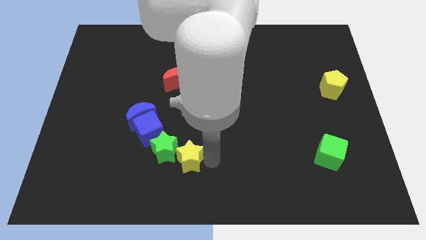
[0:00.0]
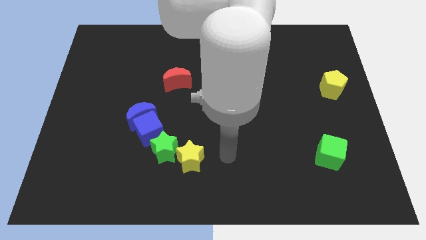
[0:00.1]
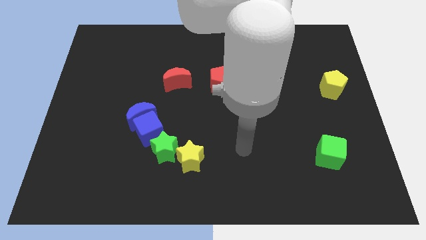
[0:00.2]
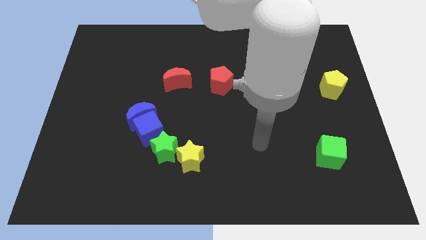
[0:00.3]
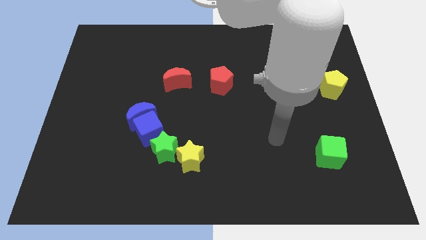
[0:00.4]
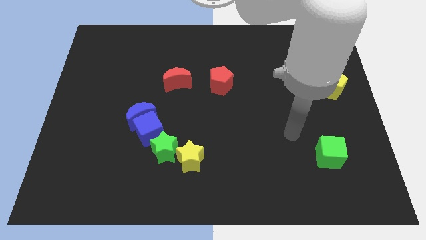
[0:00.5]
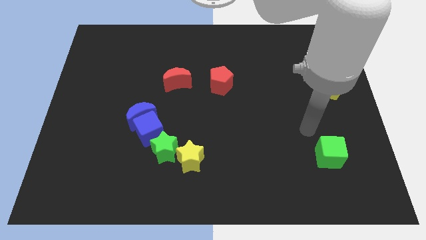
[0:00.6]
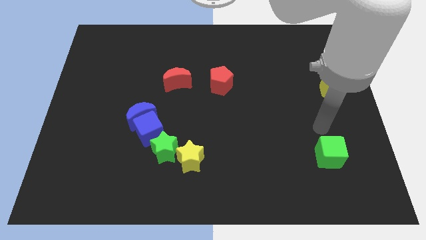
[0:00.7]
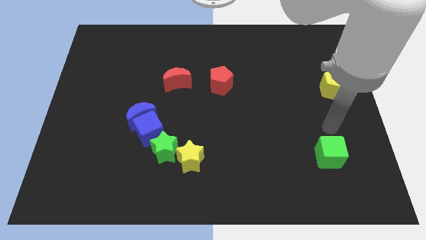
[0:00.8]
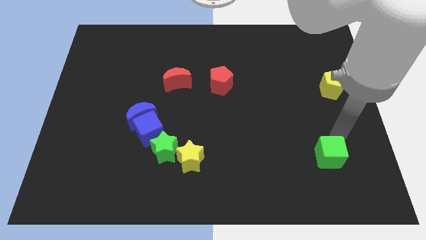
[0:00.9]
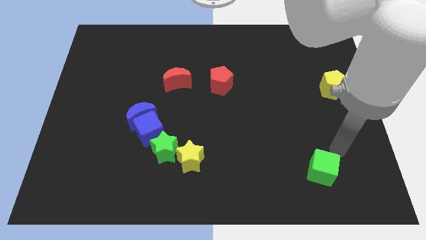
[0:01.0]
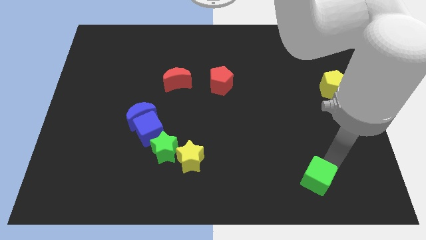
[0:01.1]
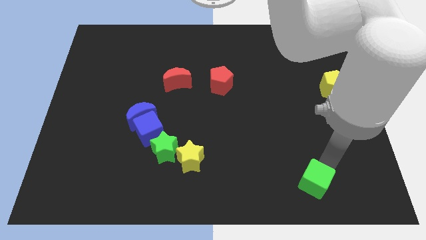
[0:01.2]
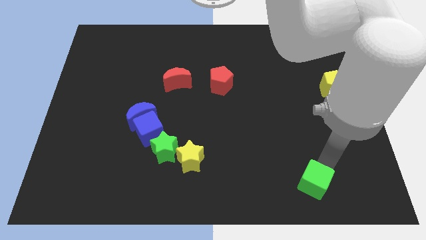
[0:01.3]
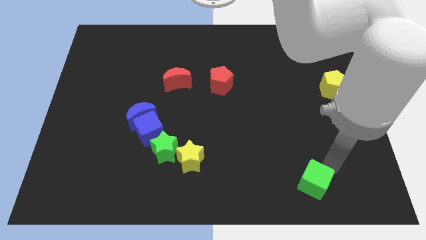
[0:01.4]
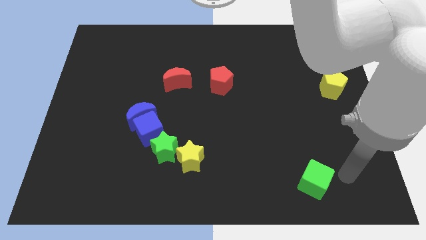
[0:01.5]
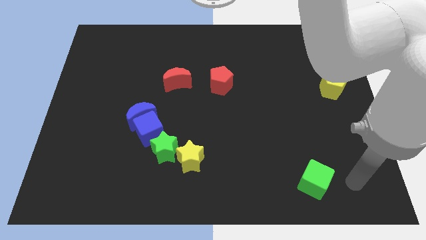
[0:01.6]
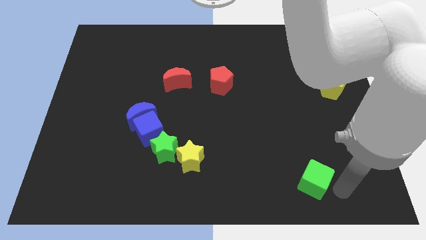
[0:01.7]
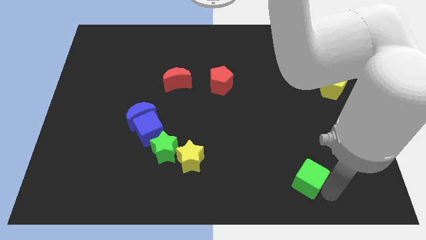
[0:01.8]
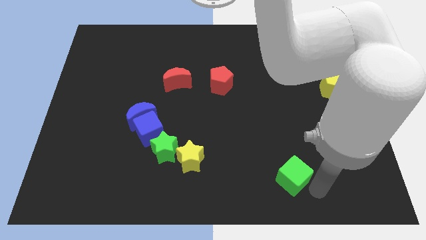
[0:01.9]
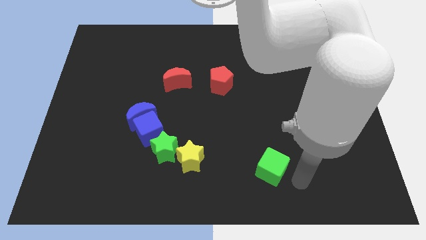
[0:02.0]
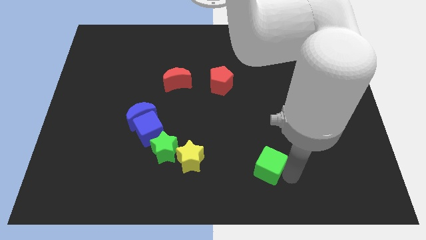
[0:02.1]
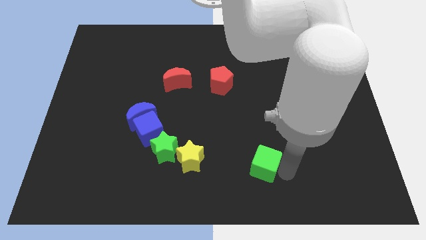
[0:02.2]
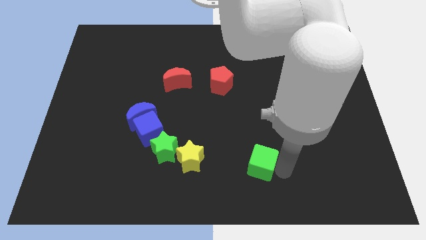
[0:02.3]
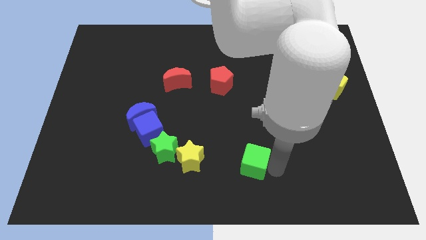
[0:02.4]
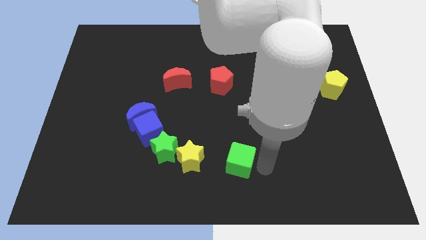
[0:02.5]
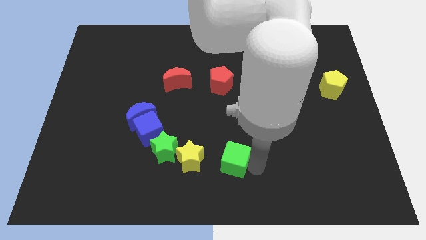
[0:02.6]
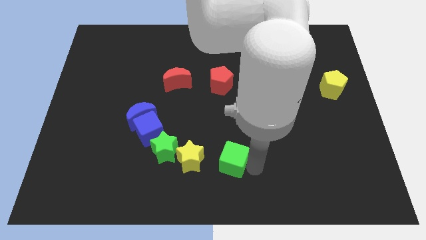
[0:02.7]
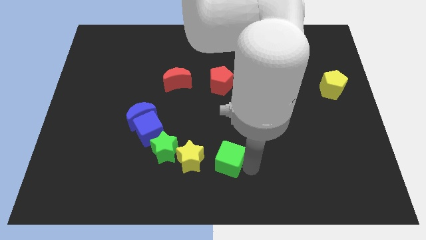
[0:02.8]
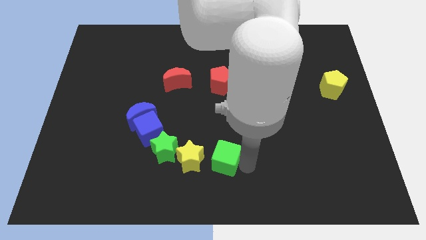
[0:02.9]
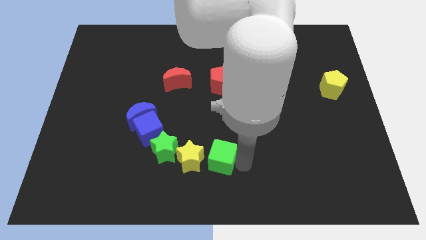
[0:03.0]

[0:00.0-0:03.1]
move the green cube horizontally to the right side of the yellow star

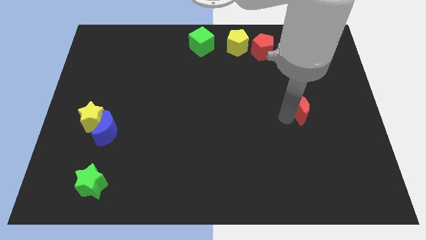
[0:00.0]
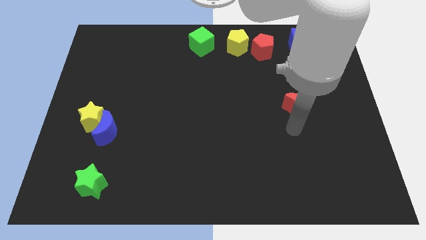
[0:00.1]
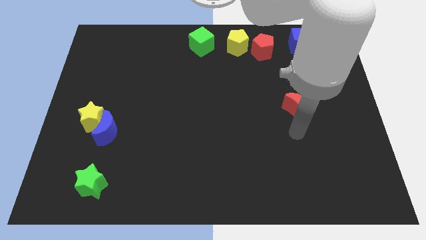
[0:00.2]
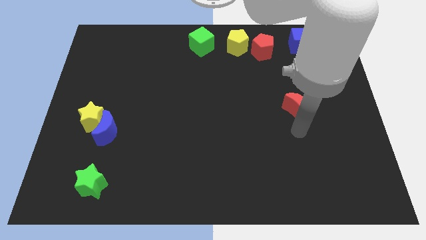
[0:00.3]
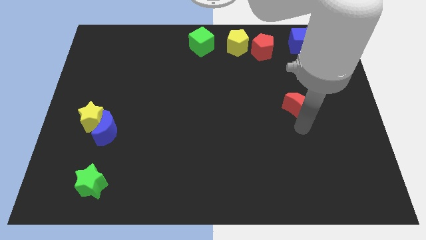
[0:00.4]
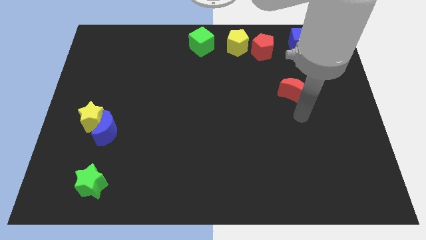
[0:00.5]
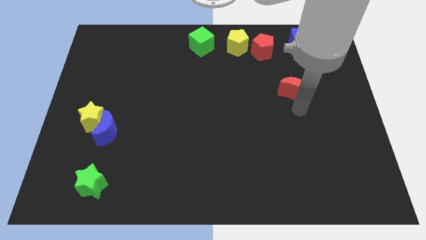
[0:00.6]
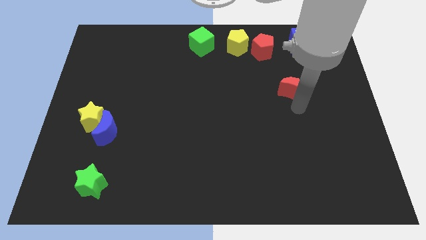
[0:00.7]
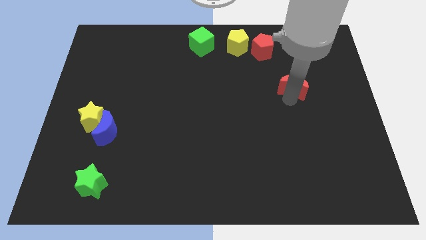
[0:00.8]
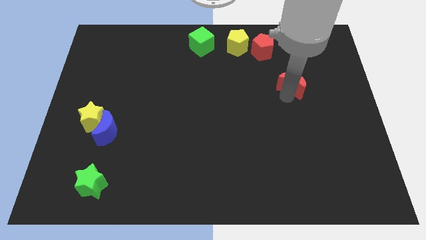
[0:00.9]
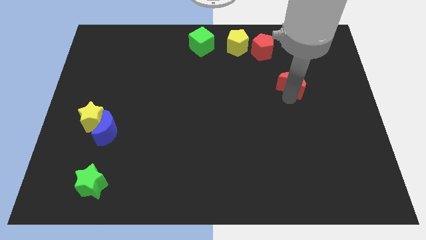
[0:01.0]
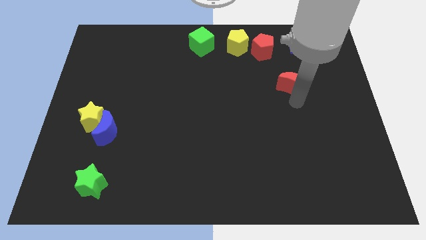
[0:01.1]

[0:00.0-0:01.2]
slightly push the red crescent to the top of the board

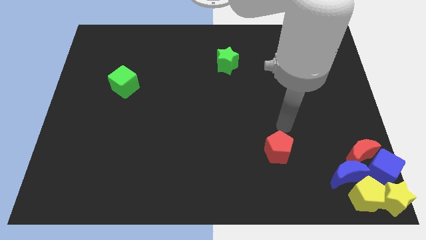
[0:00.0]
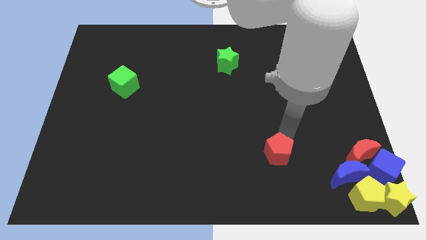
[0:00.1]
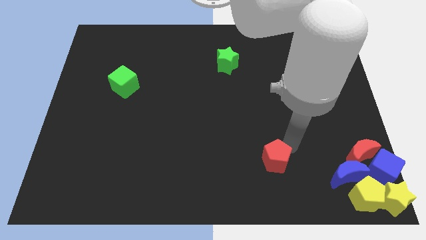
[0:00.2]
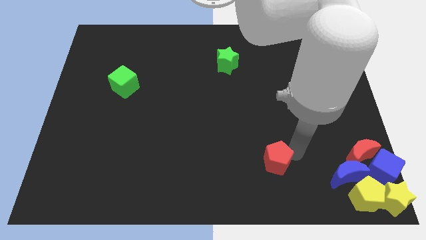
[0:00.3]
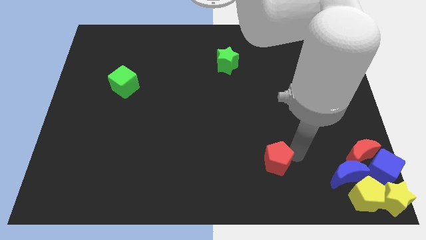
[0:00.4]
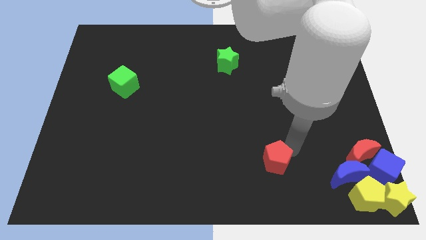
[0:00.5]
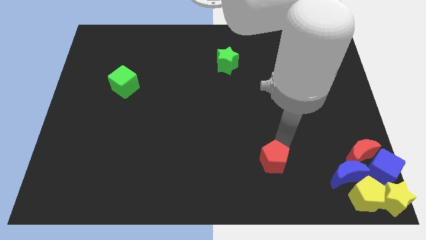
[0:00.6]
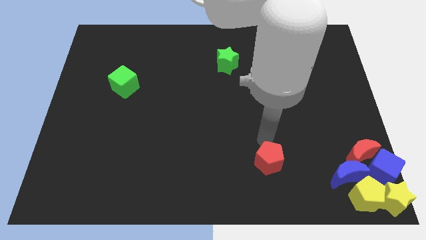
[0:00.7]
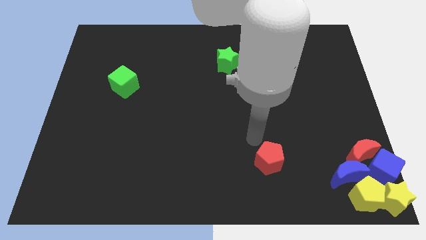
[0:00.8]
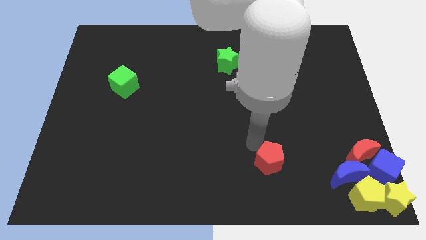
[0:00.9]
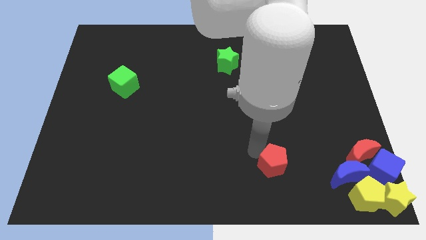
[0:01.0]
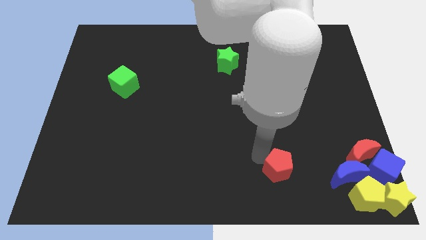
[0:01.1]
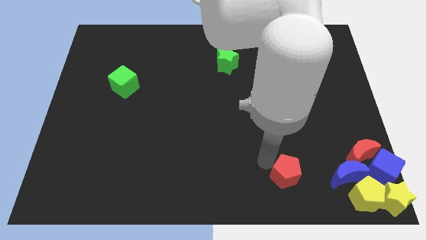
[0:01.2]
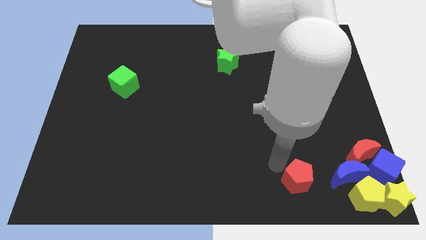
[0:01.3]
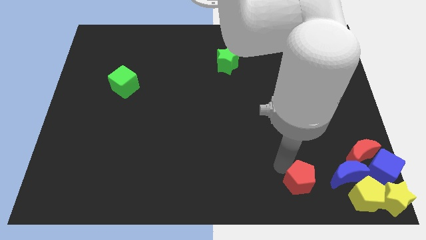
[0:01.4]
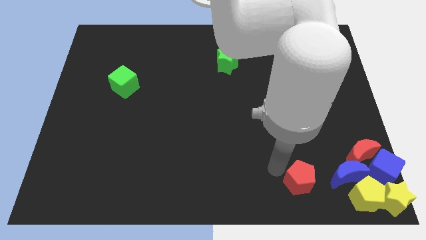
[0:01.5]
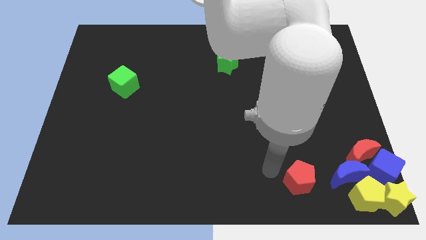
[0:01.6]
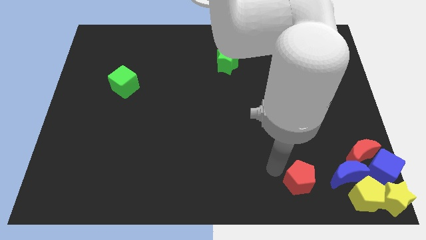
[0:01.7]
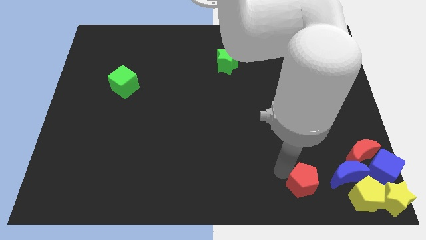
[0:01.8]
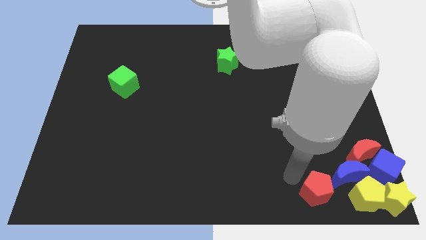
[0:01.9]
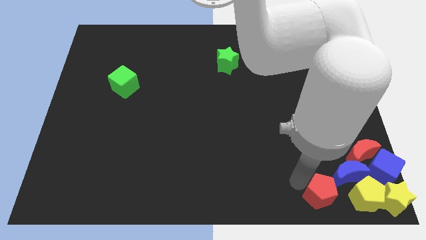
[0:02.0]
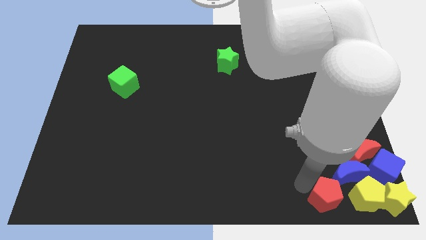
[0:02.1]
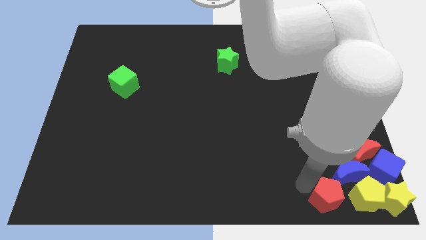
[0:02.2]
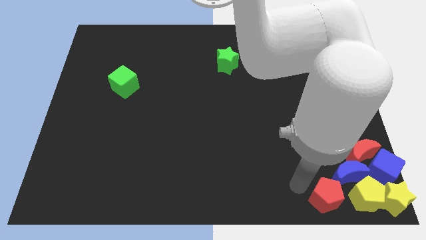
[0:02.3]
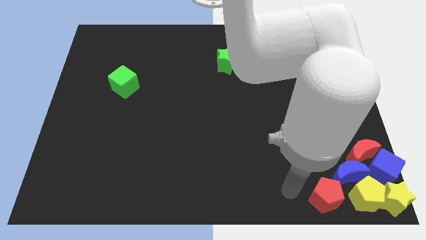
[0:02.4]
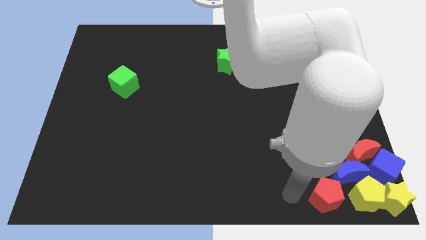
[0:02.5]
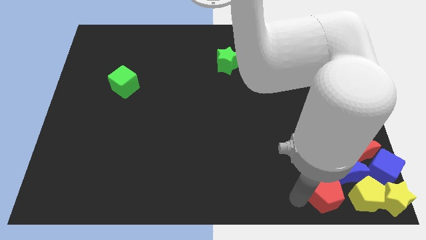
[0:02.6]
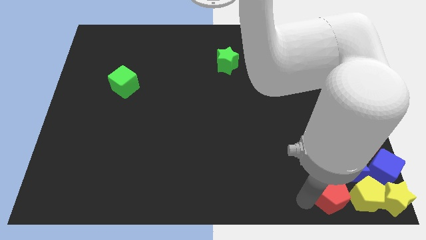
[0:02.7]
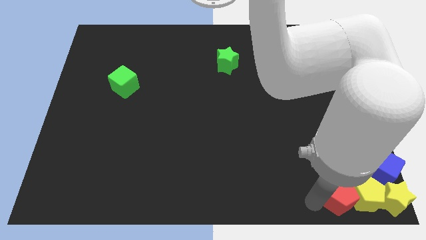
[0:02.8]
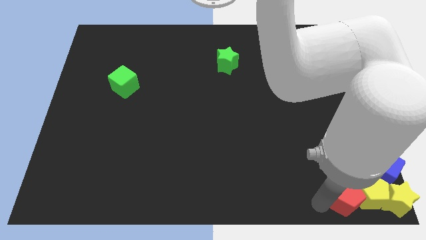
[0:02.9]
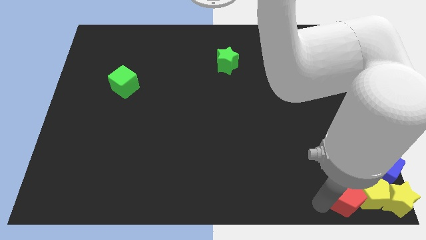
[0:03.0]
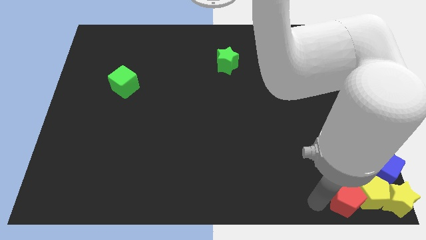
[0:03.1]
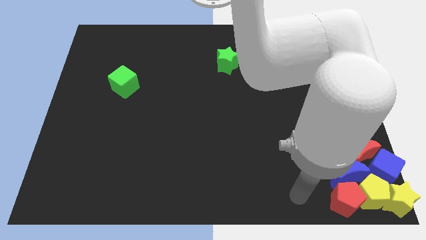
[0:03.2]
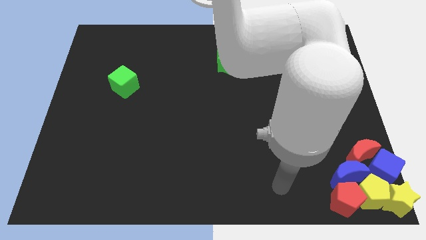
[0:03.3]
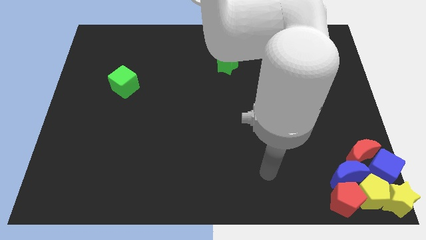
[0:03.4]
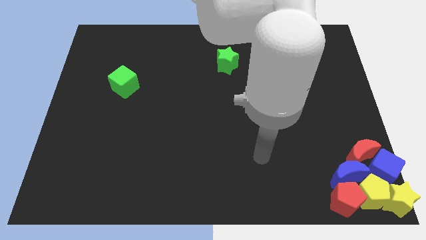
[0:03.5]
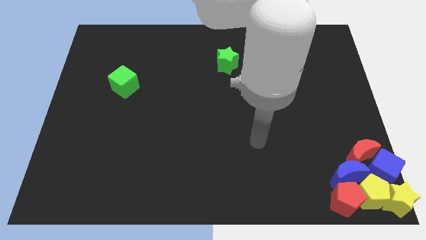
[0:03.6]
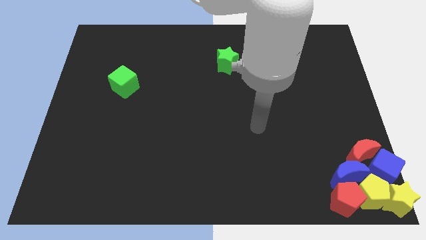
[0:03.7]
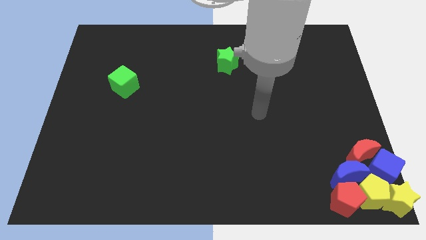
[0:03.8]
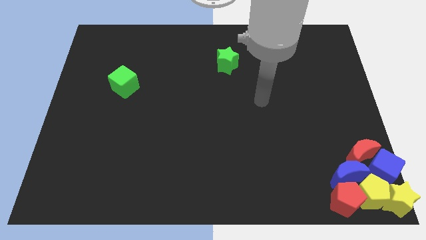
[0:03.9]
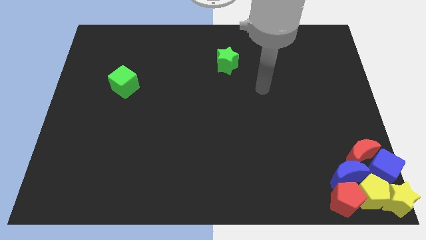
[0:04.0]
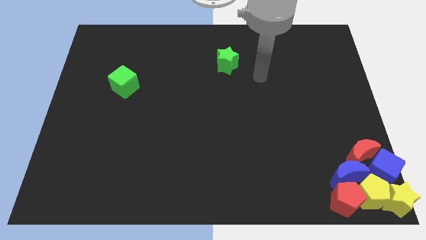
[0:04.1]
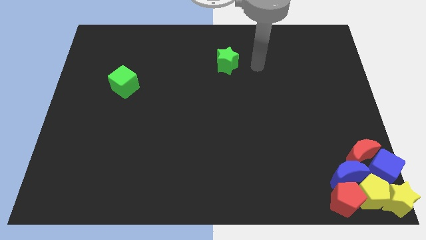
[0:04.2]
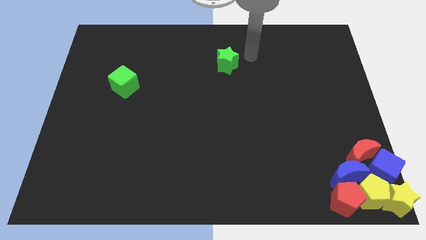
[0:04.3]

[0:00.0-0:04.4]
slide the red pentagon into the yellow pentagon

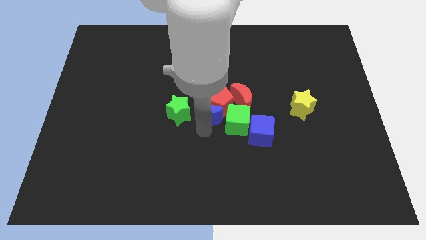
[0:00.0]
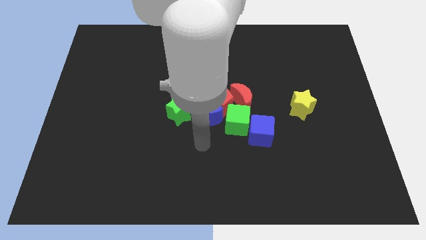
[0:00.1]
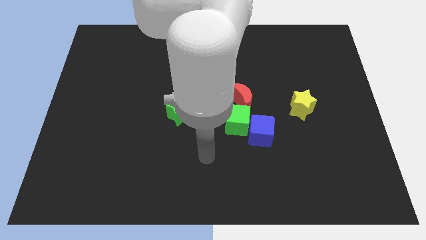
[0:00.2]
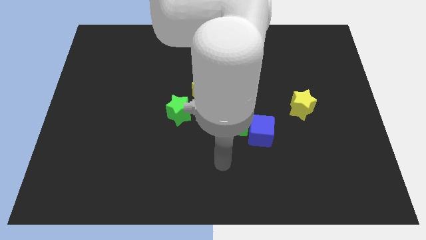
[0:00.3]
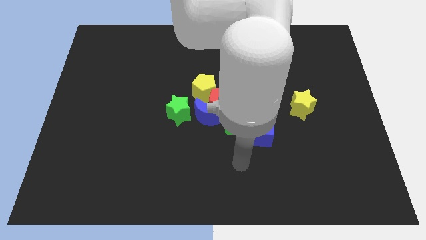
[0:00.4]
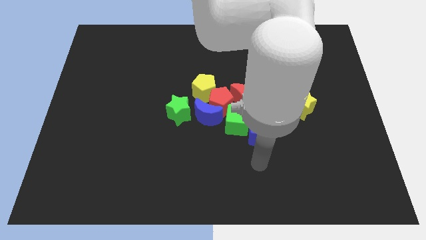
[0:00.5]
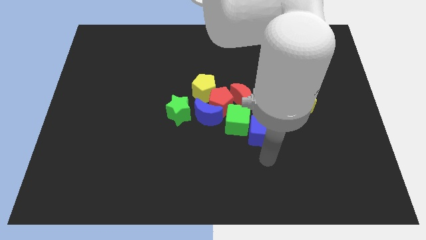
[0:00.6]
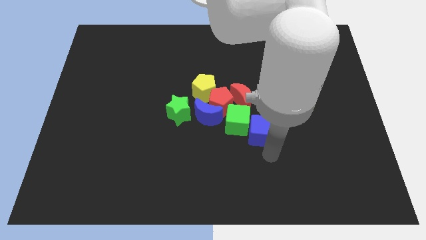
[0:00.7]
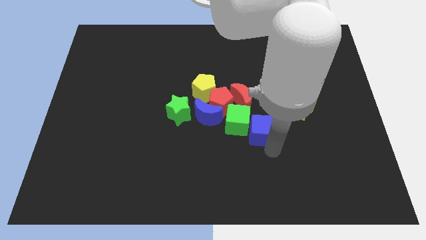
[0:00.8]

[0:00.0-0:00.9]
place the arm to the bottom side of the blue cube
